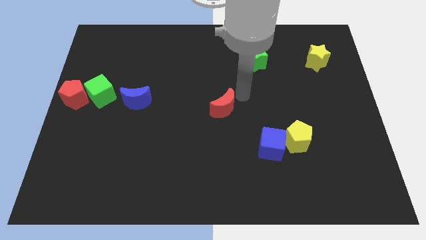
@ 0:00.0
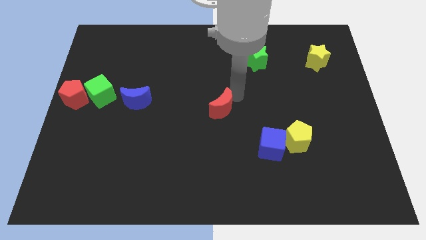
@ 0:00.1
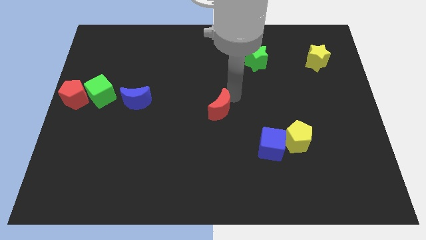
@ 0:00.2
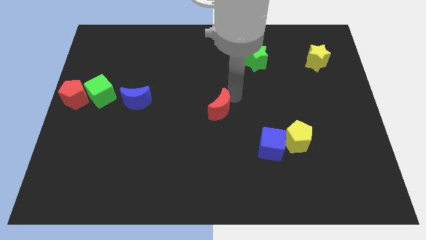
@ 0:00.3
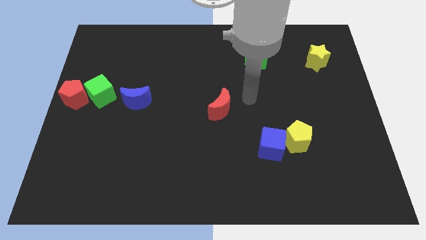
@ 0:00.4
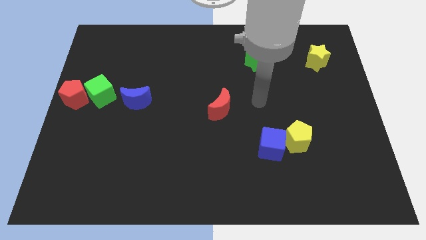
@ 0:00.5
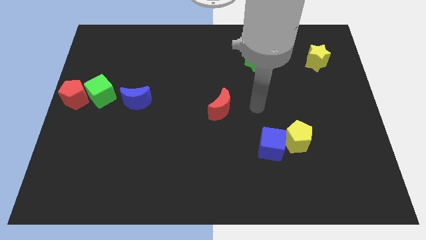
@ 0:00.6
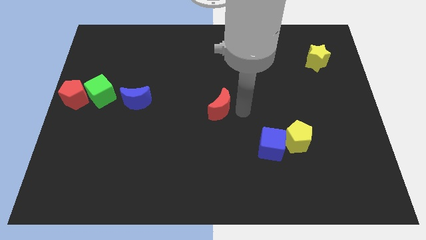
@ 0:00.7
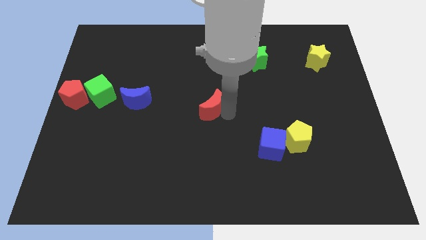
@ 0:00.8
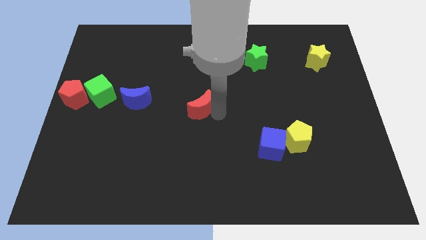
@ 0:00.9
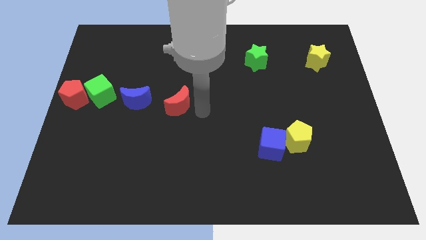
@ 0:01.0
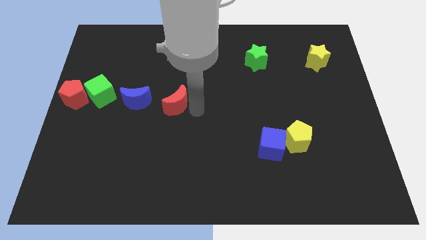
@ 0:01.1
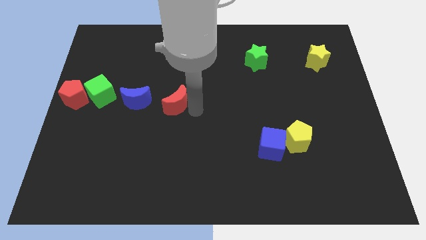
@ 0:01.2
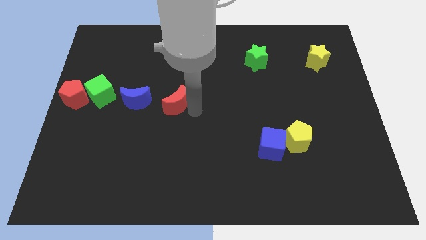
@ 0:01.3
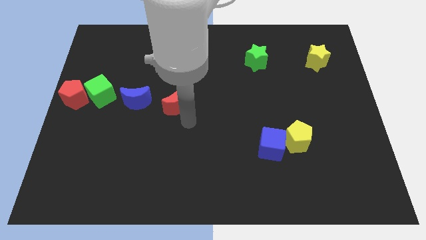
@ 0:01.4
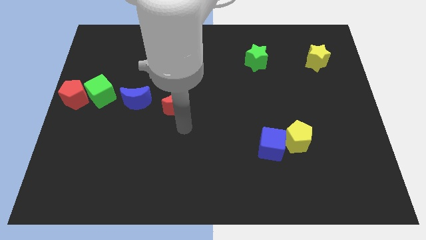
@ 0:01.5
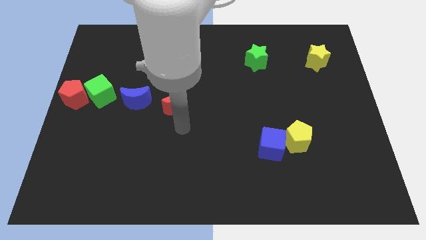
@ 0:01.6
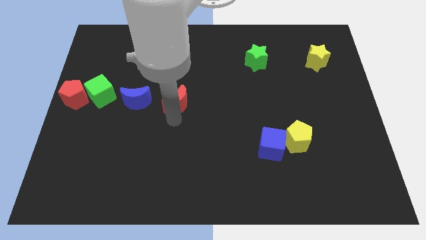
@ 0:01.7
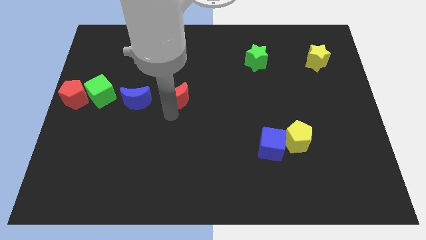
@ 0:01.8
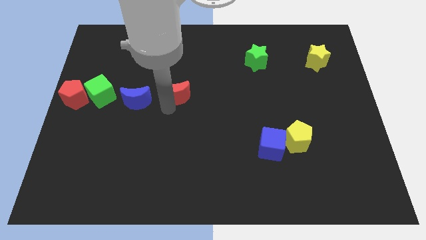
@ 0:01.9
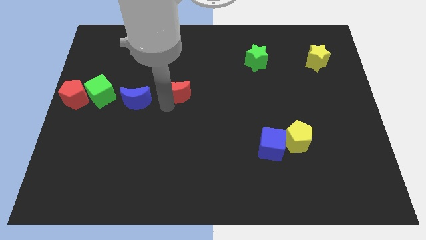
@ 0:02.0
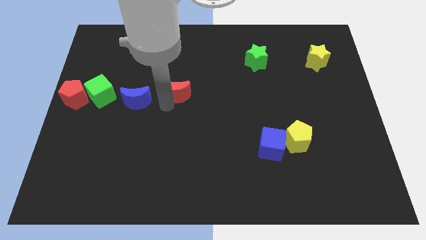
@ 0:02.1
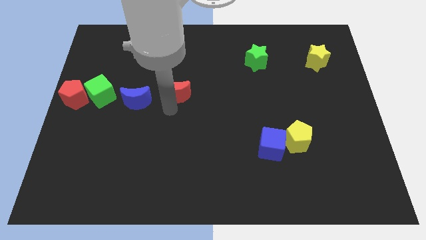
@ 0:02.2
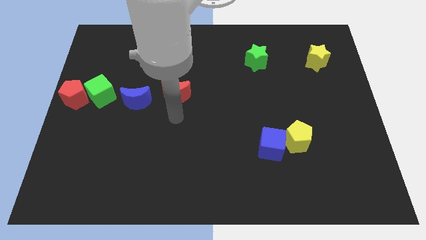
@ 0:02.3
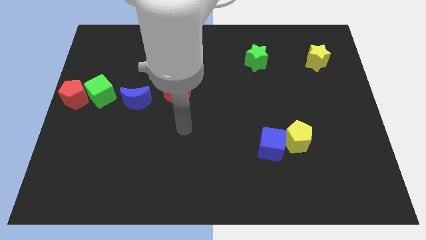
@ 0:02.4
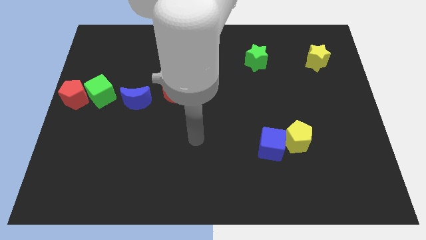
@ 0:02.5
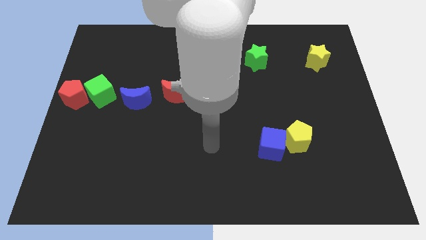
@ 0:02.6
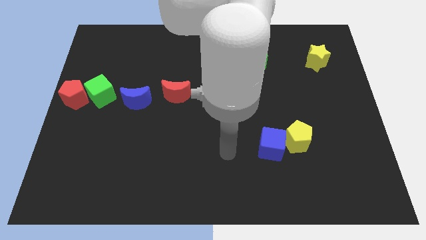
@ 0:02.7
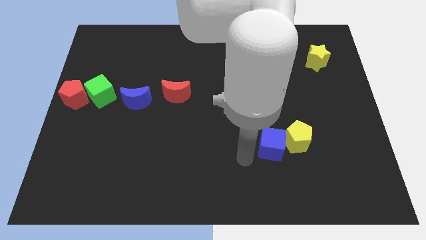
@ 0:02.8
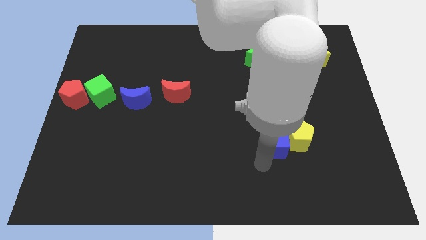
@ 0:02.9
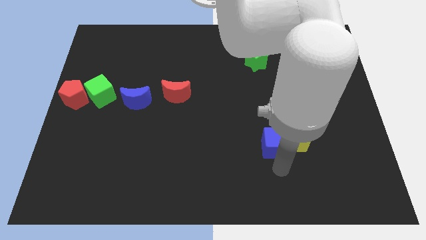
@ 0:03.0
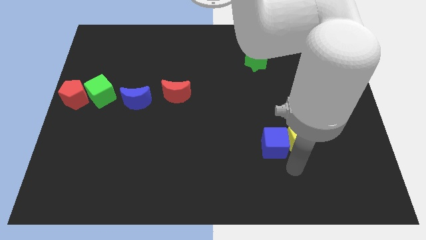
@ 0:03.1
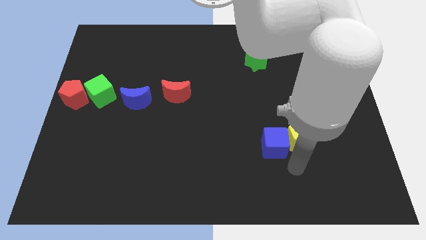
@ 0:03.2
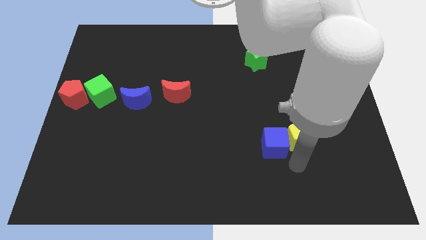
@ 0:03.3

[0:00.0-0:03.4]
place the red crescent to the right side of the blue crescent

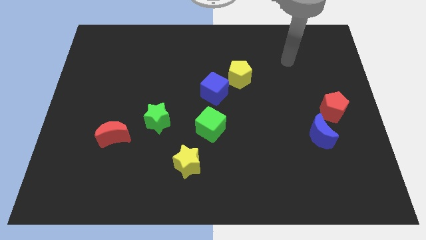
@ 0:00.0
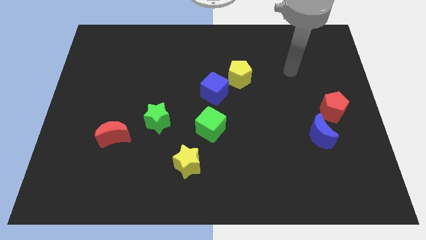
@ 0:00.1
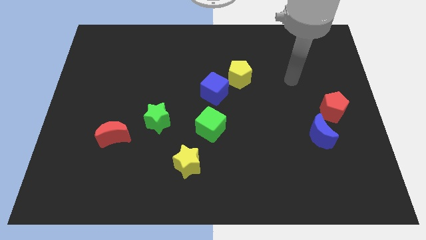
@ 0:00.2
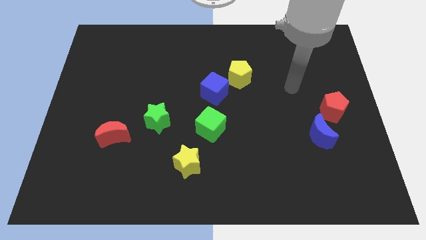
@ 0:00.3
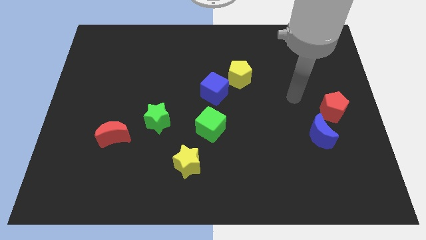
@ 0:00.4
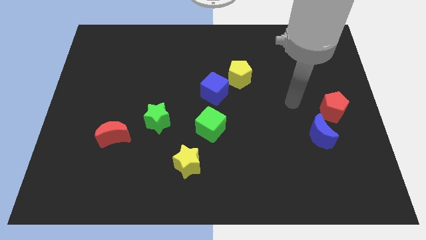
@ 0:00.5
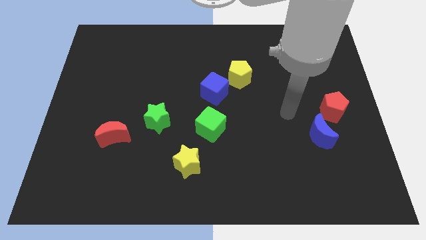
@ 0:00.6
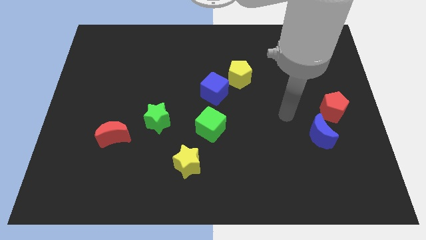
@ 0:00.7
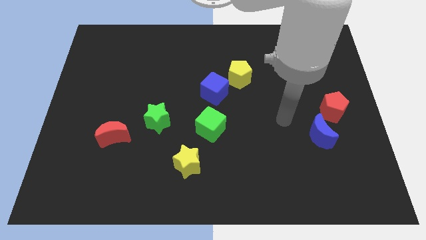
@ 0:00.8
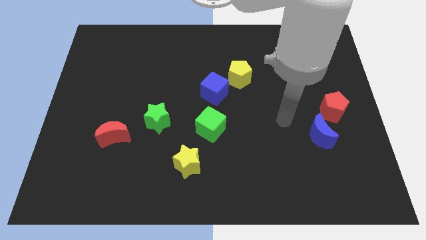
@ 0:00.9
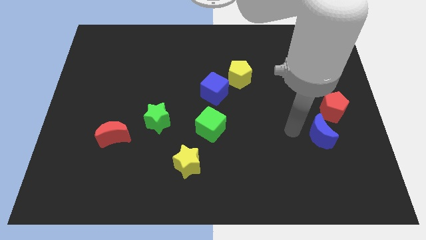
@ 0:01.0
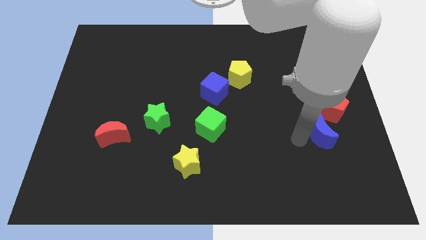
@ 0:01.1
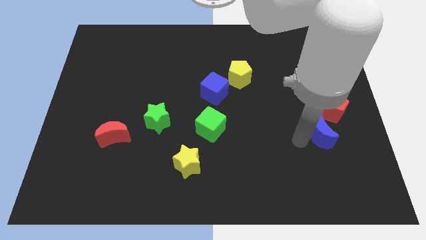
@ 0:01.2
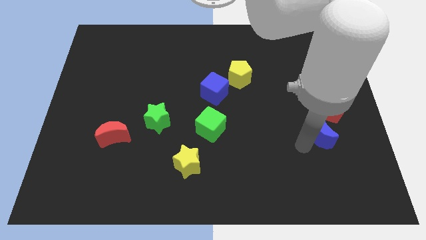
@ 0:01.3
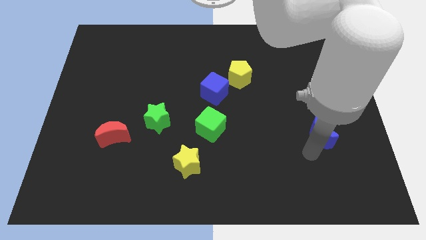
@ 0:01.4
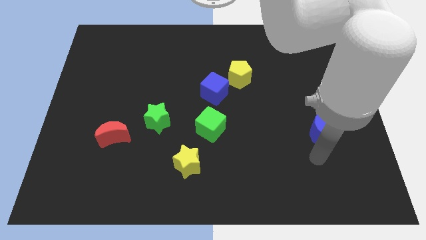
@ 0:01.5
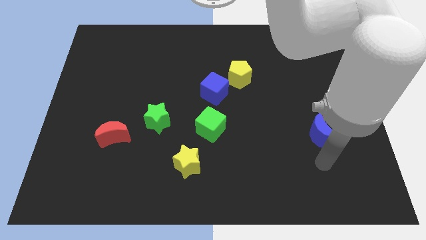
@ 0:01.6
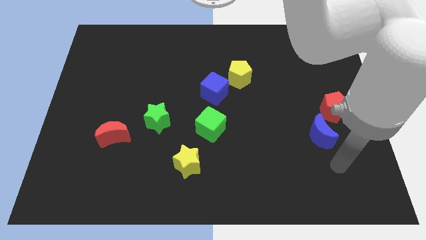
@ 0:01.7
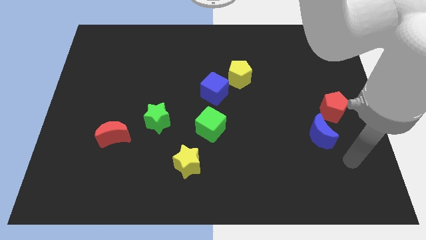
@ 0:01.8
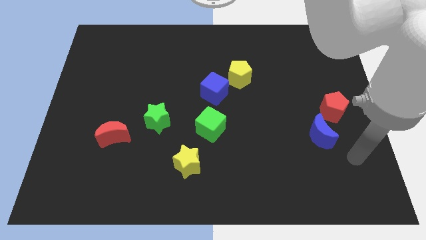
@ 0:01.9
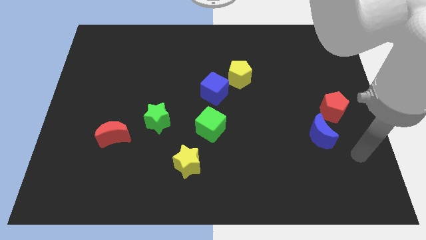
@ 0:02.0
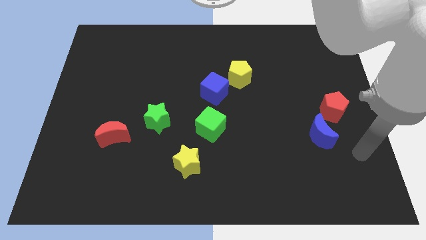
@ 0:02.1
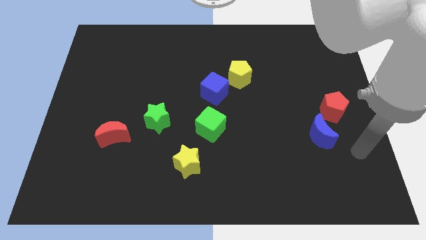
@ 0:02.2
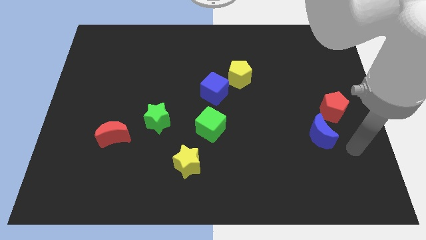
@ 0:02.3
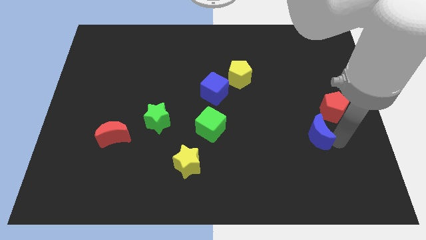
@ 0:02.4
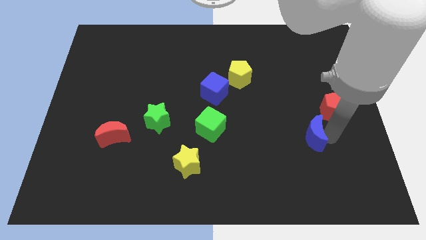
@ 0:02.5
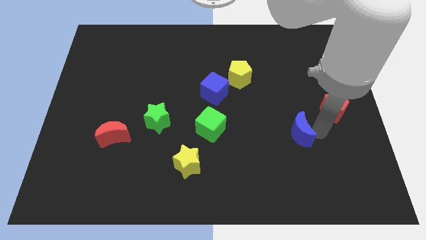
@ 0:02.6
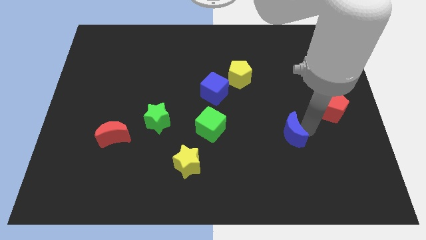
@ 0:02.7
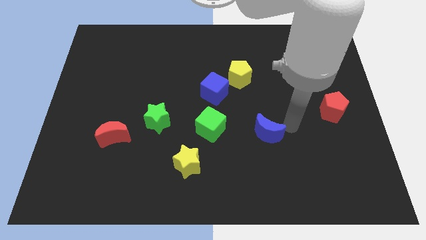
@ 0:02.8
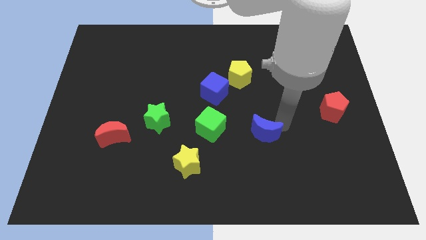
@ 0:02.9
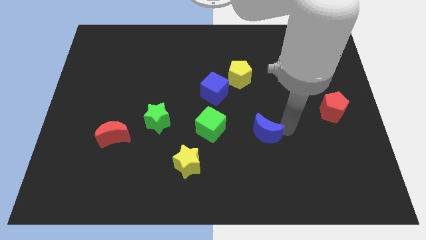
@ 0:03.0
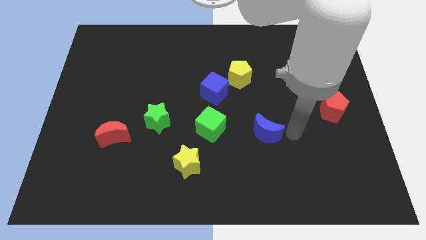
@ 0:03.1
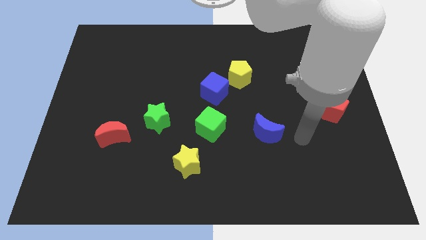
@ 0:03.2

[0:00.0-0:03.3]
place the blue crescent to the right of the green cube

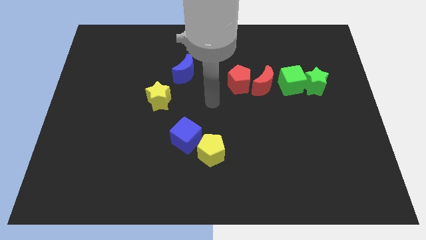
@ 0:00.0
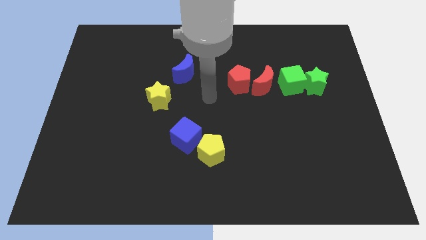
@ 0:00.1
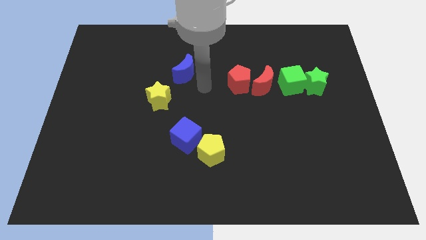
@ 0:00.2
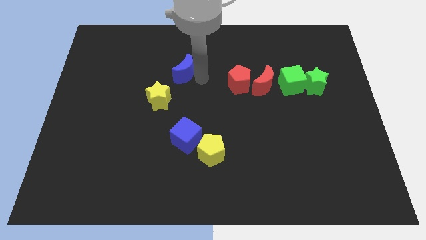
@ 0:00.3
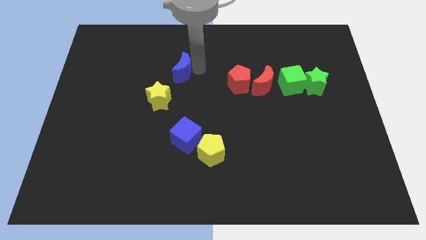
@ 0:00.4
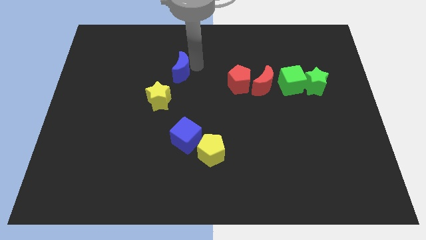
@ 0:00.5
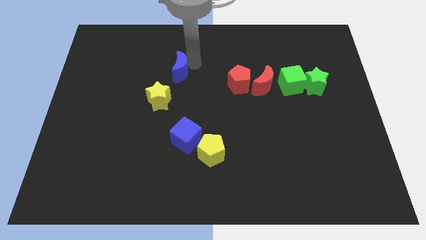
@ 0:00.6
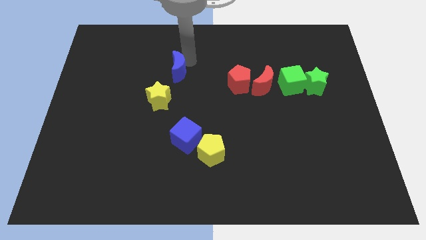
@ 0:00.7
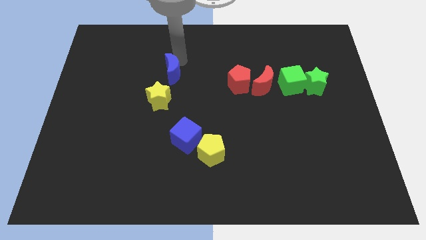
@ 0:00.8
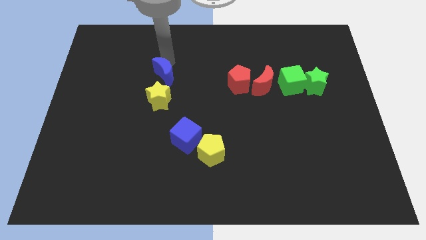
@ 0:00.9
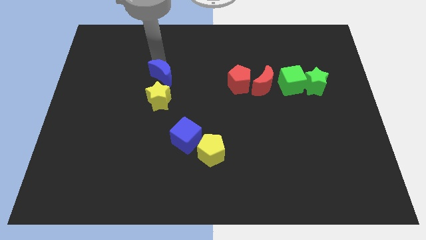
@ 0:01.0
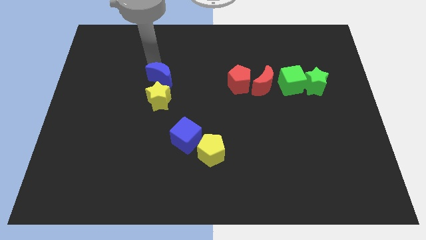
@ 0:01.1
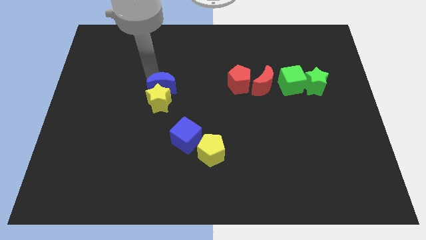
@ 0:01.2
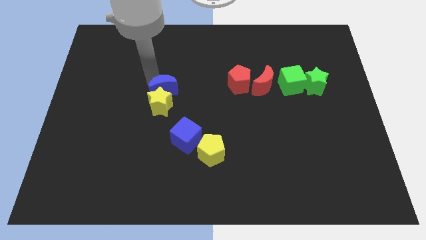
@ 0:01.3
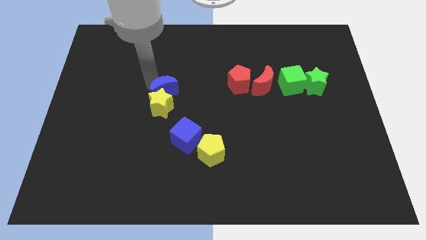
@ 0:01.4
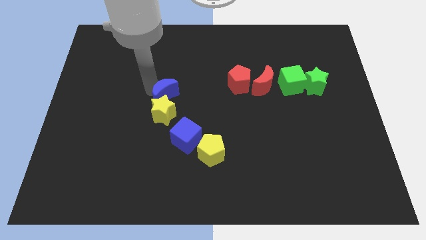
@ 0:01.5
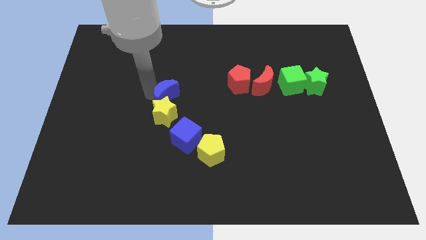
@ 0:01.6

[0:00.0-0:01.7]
push the blue crescent to the top of the yellow star

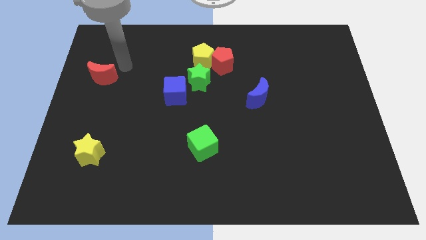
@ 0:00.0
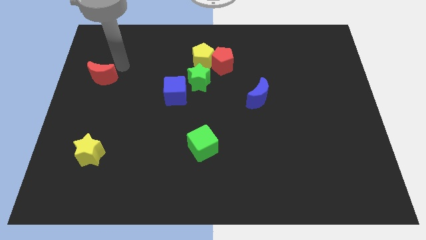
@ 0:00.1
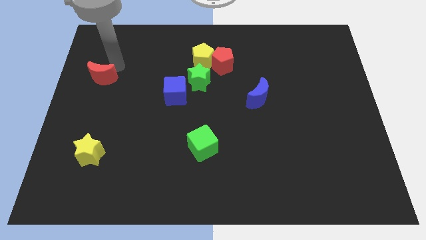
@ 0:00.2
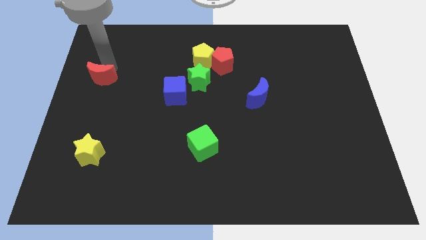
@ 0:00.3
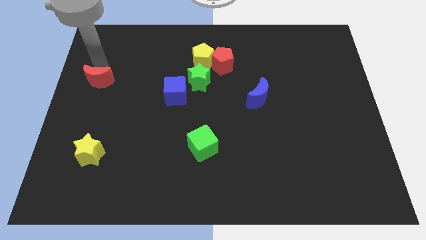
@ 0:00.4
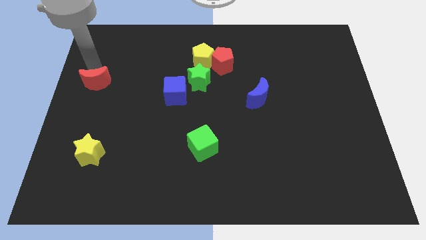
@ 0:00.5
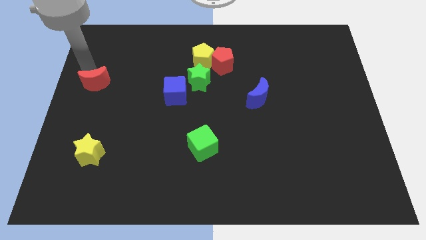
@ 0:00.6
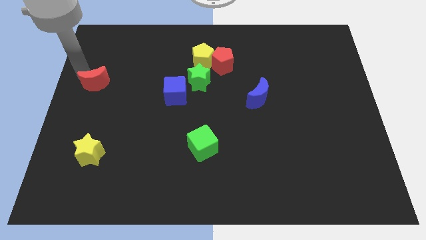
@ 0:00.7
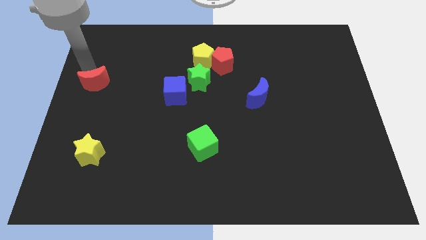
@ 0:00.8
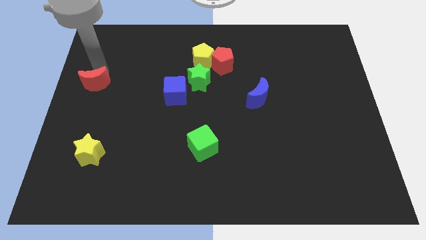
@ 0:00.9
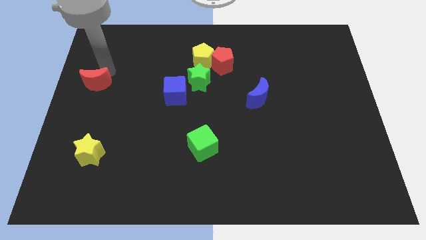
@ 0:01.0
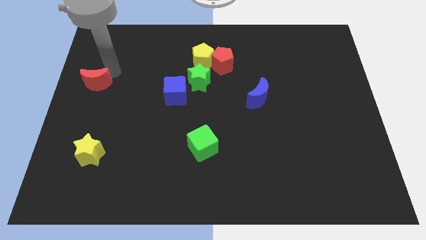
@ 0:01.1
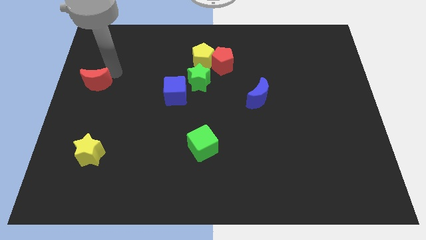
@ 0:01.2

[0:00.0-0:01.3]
move the red crescent slightly downwards
